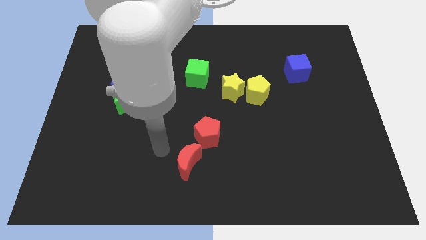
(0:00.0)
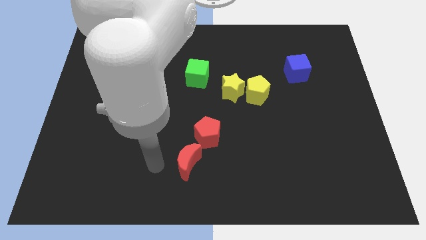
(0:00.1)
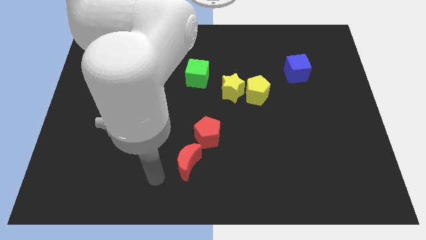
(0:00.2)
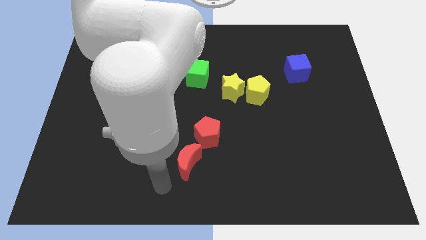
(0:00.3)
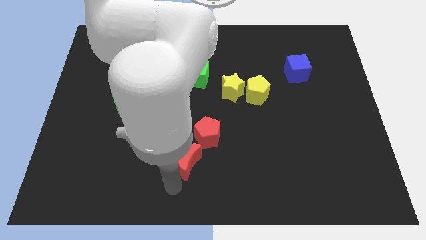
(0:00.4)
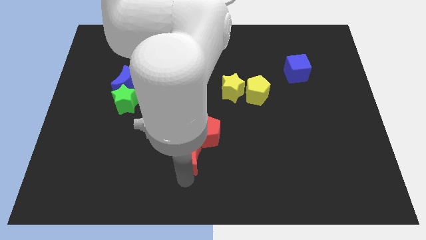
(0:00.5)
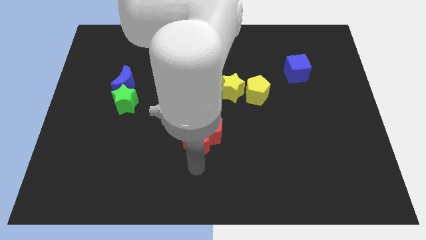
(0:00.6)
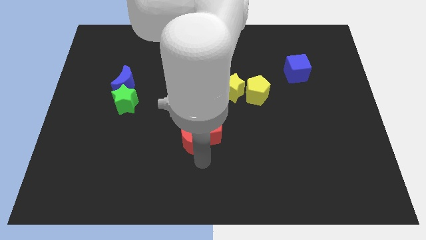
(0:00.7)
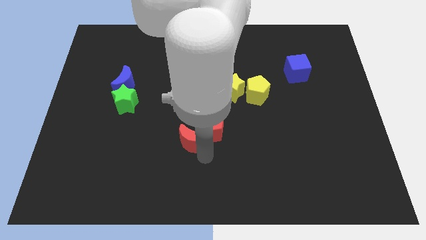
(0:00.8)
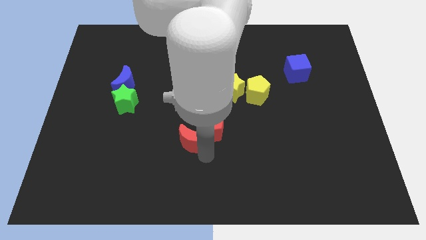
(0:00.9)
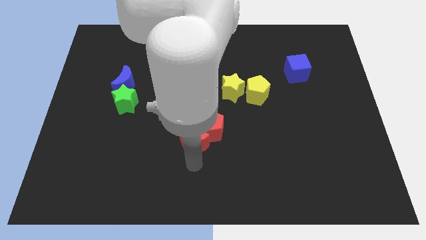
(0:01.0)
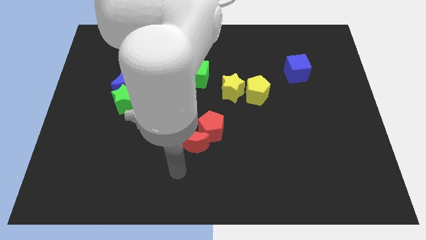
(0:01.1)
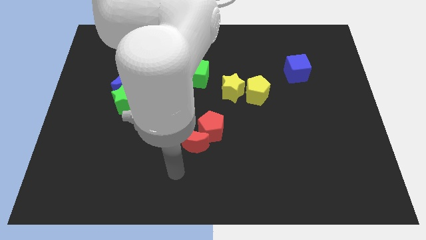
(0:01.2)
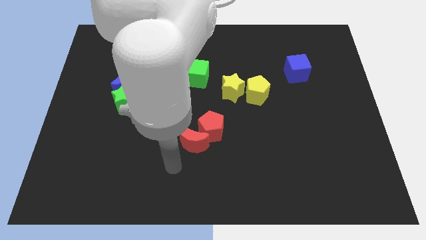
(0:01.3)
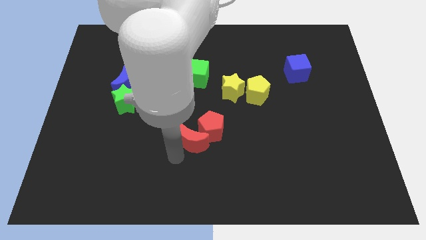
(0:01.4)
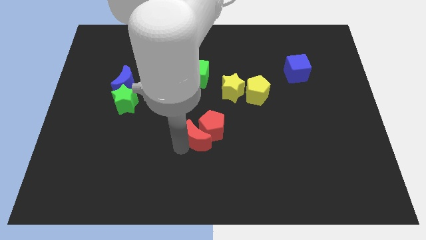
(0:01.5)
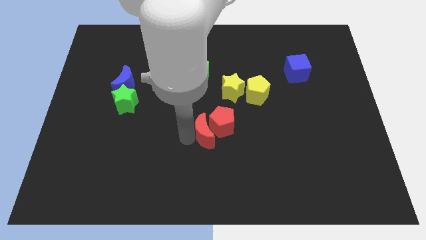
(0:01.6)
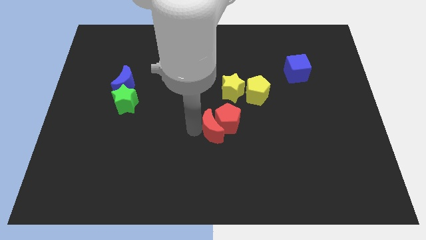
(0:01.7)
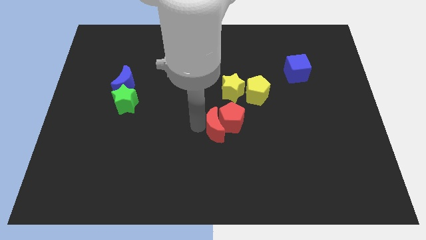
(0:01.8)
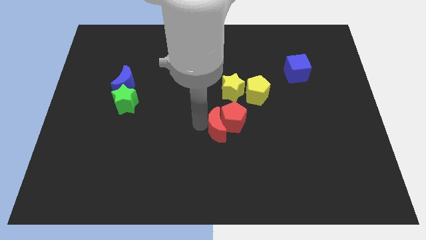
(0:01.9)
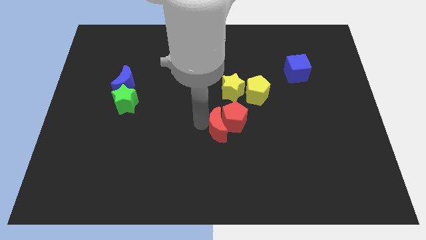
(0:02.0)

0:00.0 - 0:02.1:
push the red moon and red pentagon towards center of the board

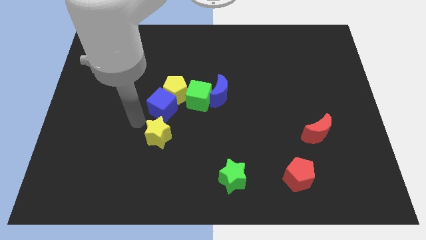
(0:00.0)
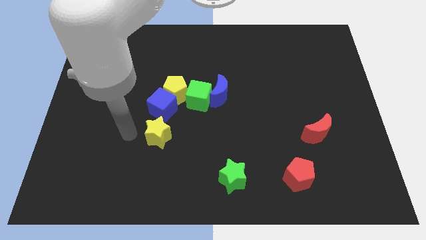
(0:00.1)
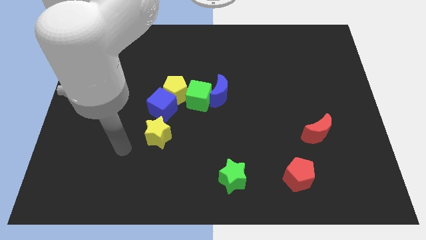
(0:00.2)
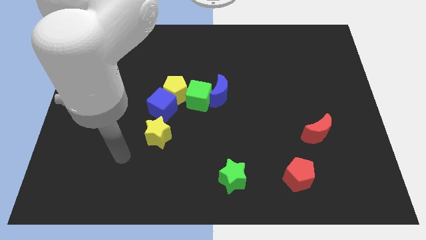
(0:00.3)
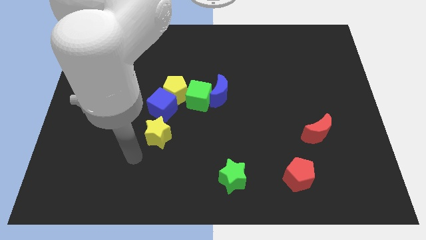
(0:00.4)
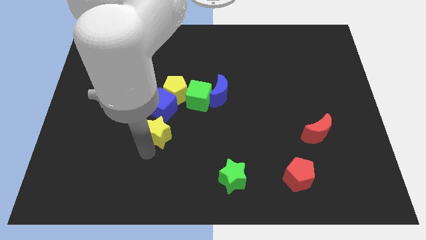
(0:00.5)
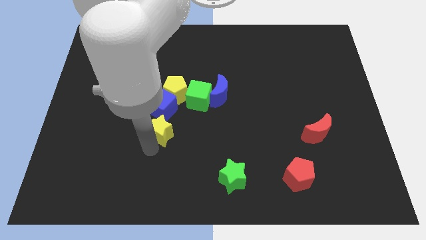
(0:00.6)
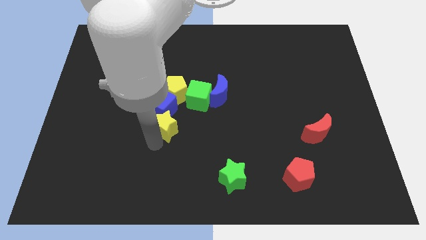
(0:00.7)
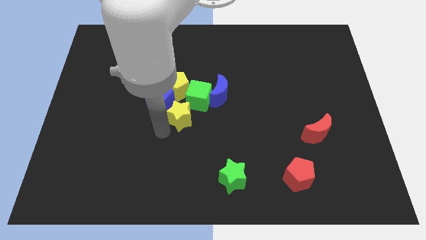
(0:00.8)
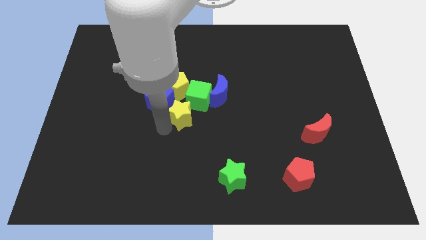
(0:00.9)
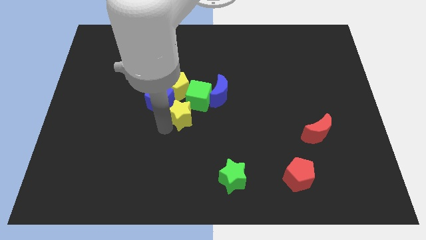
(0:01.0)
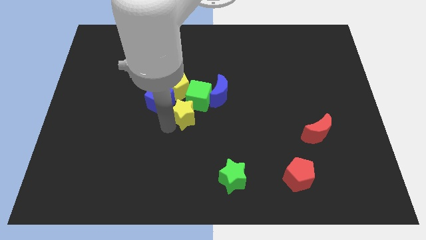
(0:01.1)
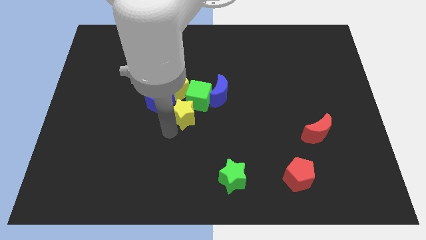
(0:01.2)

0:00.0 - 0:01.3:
move the yellow star to the bottom of the green cube

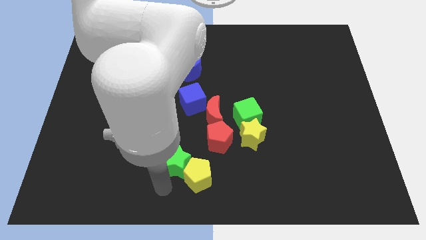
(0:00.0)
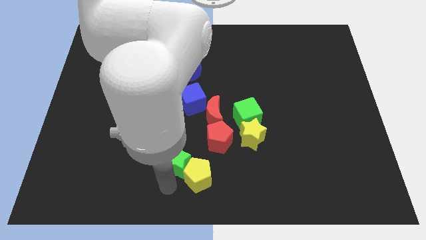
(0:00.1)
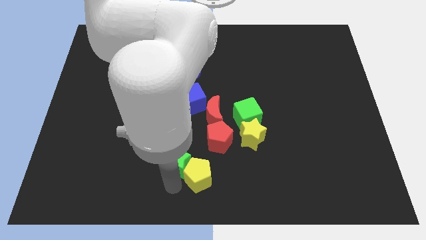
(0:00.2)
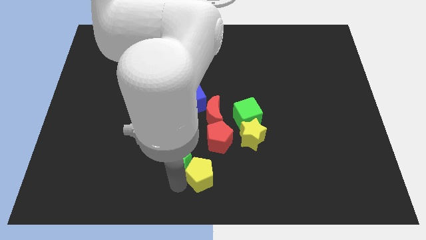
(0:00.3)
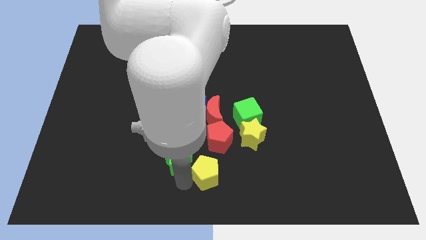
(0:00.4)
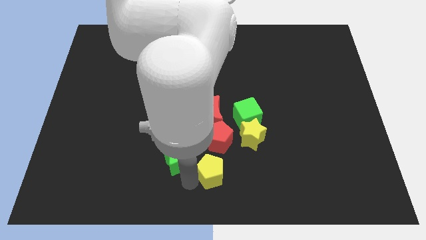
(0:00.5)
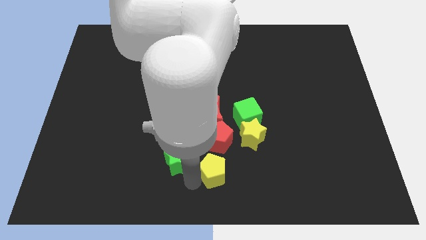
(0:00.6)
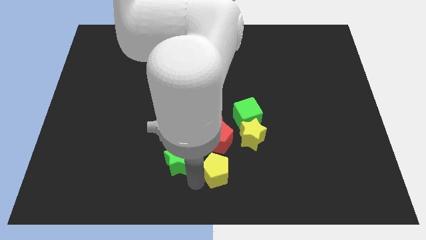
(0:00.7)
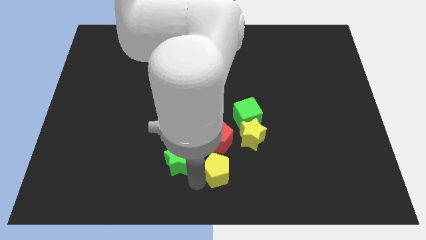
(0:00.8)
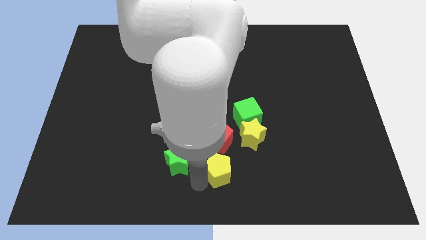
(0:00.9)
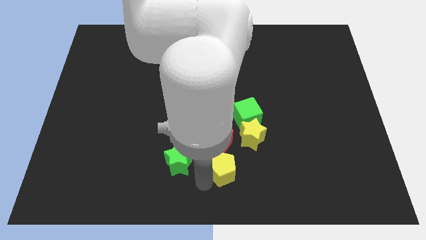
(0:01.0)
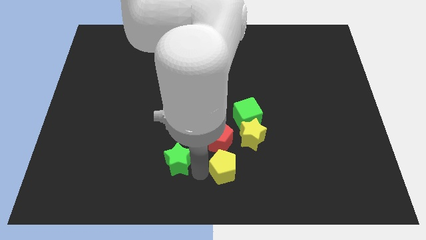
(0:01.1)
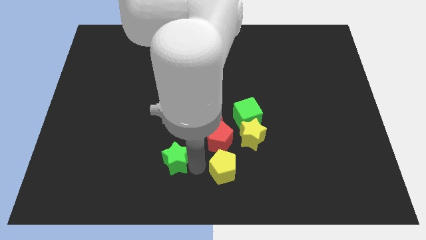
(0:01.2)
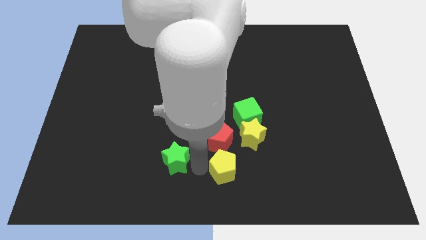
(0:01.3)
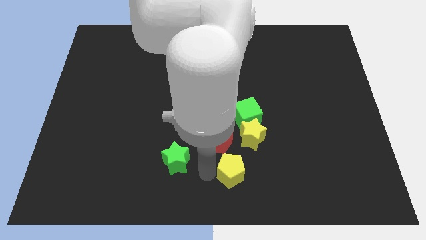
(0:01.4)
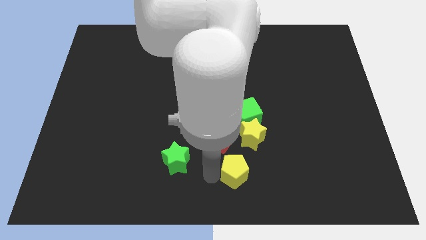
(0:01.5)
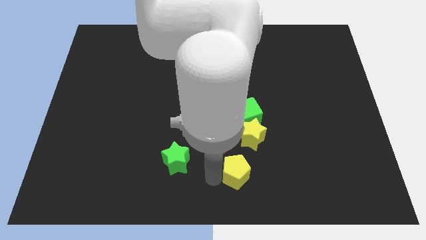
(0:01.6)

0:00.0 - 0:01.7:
separate the yellow pentagon from the green star

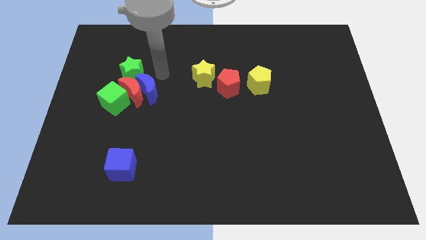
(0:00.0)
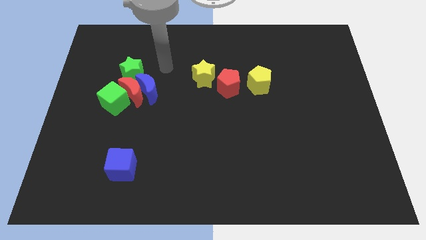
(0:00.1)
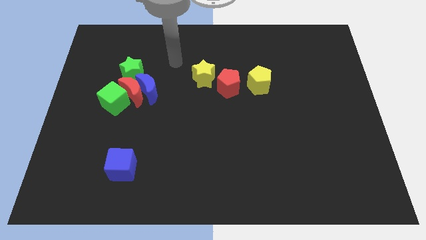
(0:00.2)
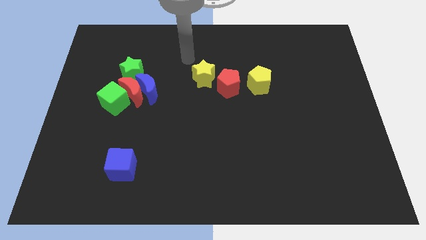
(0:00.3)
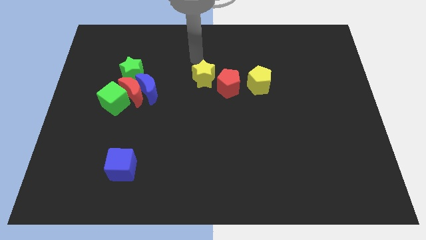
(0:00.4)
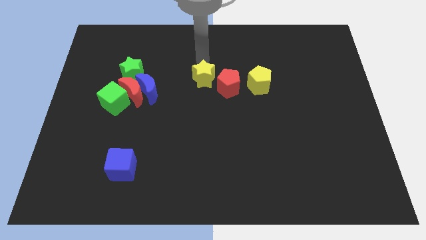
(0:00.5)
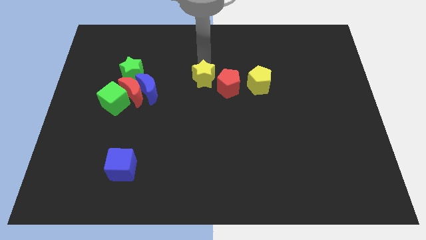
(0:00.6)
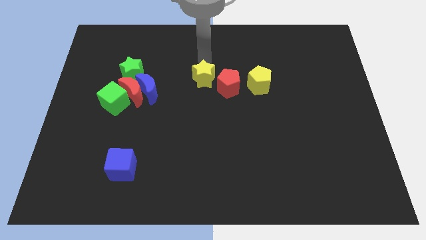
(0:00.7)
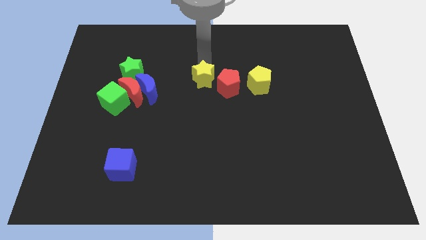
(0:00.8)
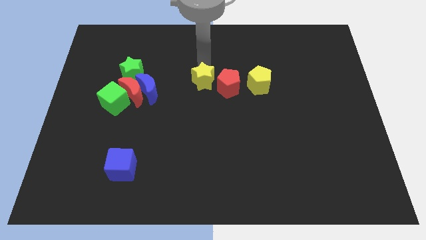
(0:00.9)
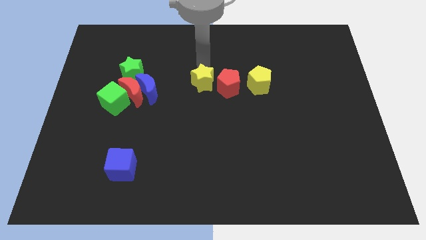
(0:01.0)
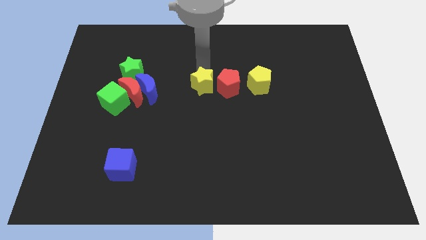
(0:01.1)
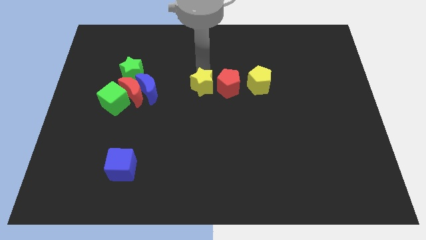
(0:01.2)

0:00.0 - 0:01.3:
push the yellow star slightly to the bottom

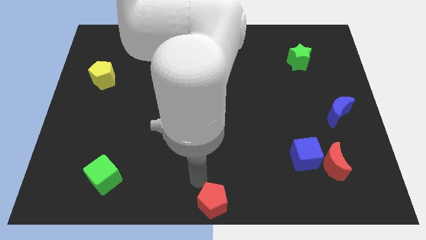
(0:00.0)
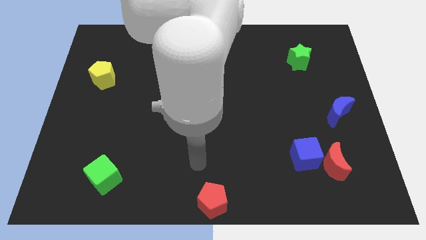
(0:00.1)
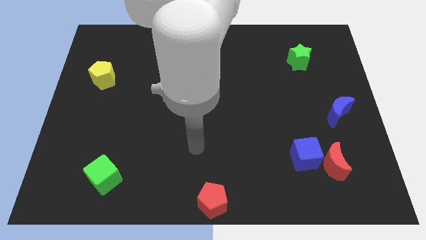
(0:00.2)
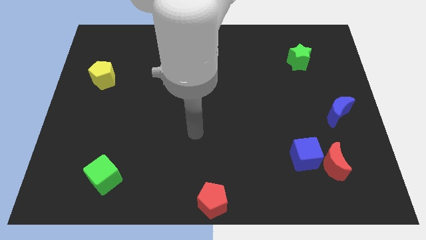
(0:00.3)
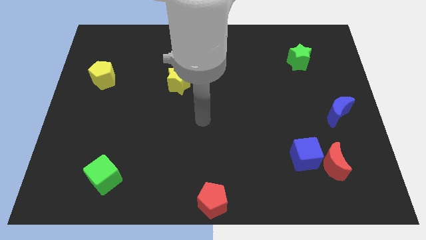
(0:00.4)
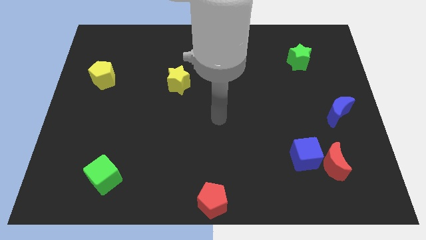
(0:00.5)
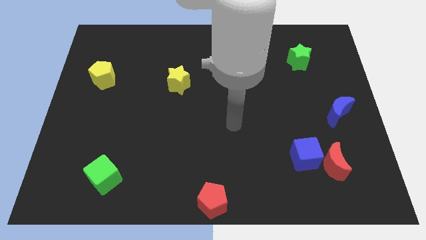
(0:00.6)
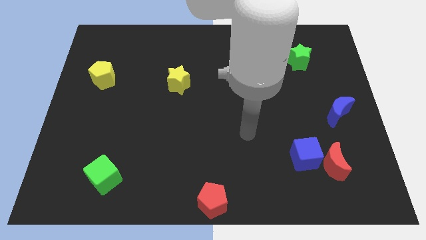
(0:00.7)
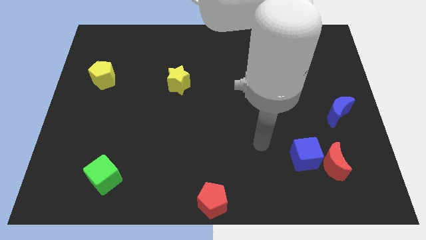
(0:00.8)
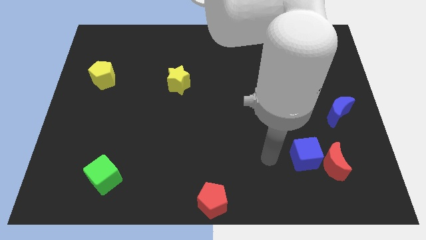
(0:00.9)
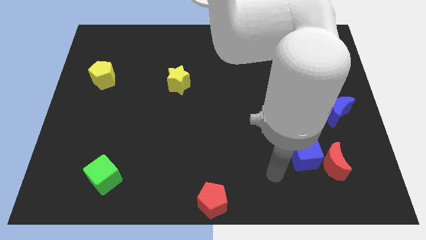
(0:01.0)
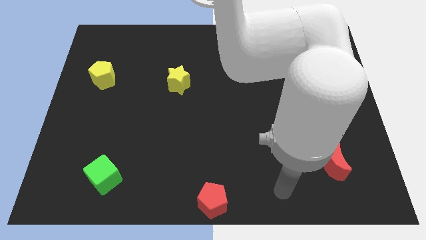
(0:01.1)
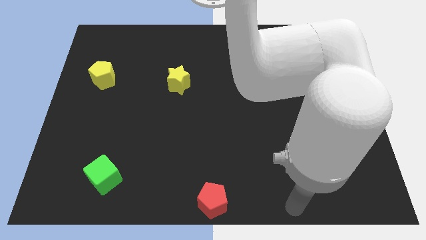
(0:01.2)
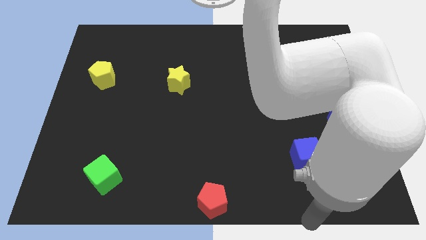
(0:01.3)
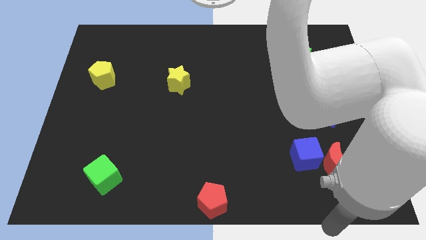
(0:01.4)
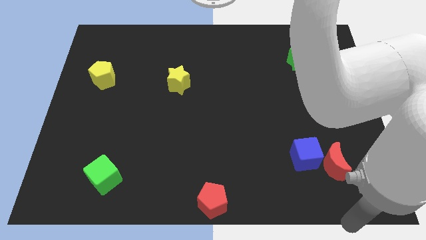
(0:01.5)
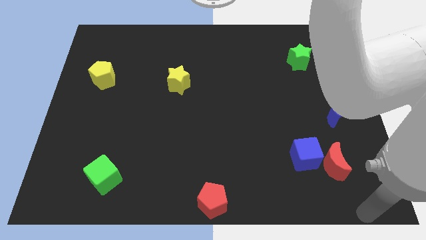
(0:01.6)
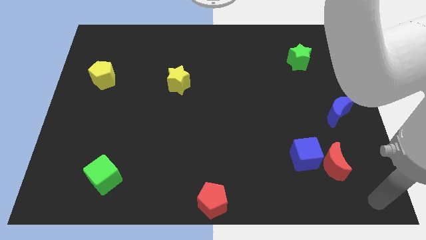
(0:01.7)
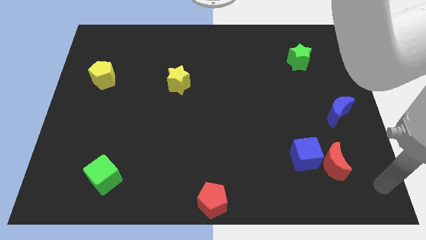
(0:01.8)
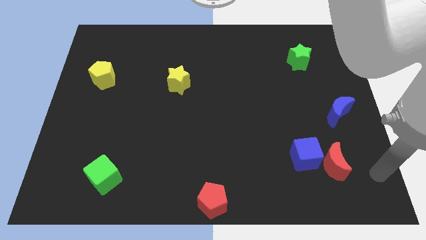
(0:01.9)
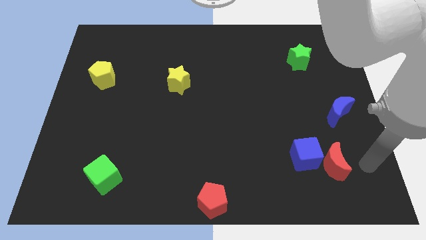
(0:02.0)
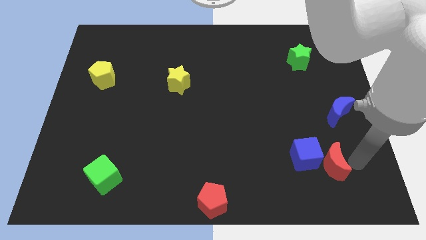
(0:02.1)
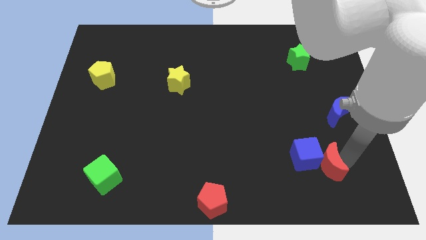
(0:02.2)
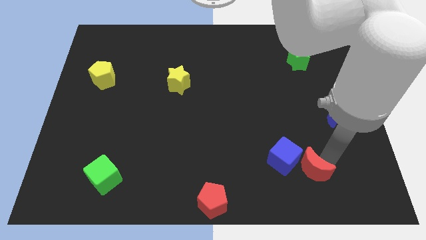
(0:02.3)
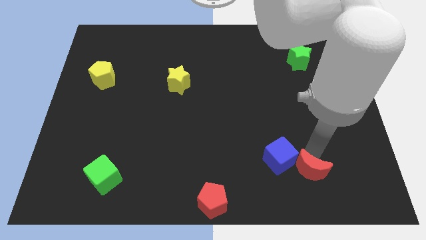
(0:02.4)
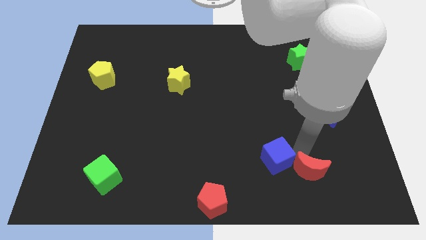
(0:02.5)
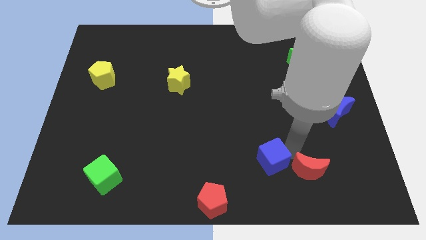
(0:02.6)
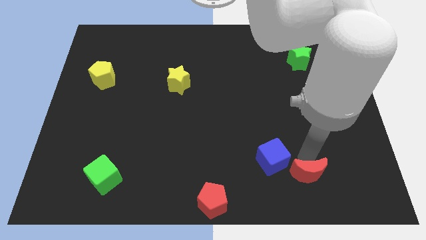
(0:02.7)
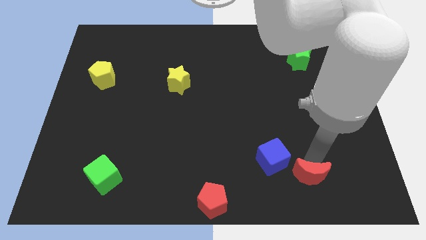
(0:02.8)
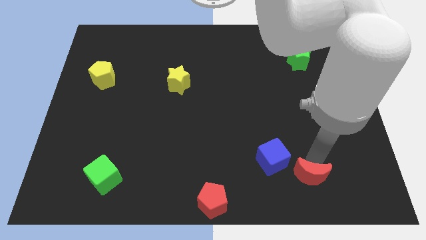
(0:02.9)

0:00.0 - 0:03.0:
push the red moon and blue cube towards the left side of the board
